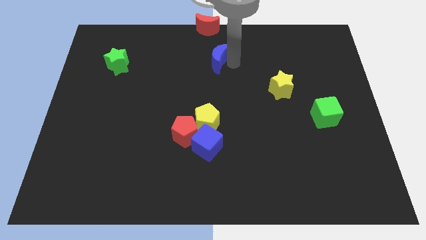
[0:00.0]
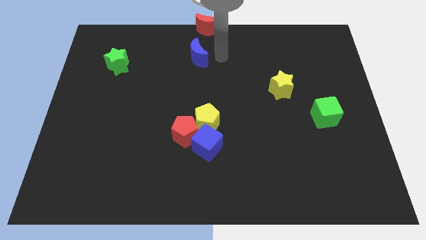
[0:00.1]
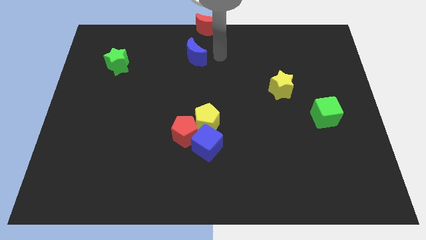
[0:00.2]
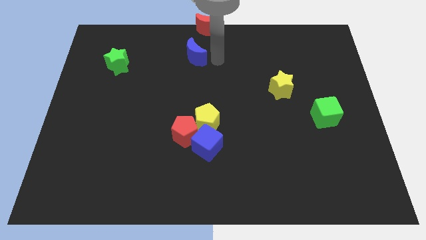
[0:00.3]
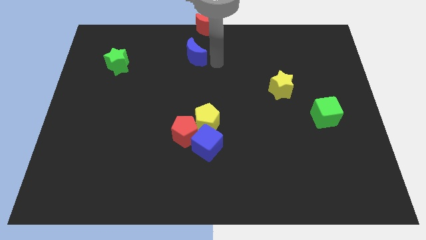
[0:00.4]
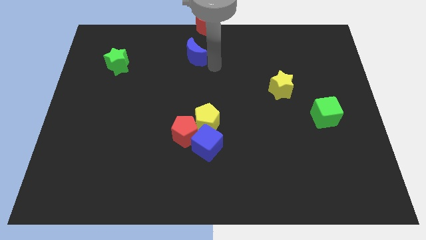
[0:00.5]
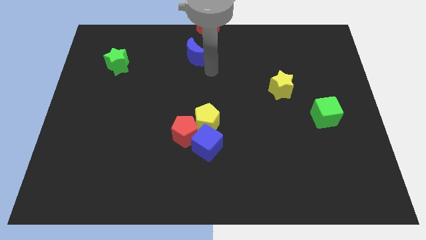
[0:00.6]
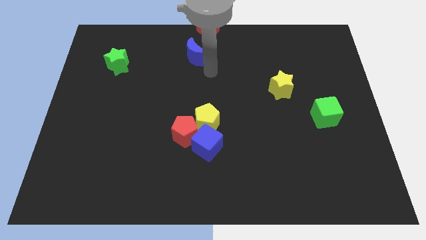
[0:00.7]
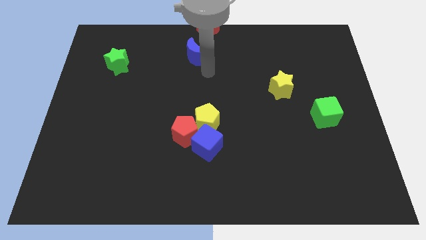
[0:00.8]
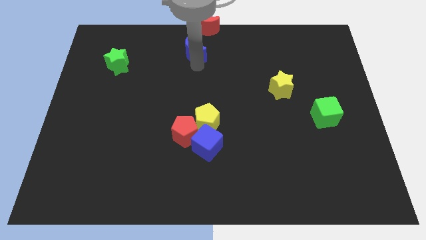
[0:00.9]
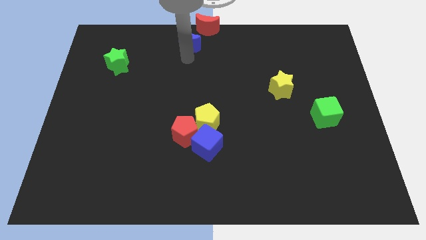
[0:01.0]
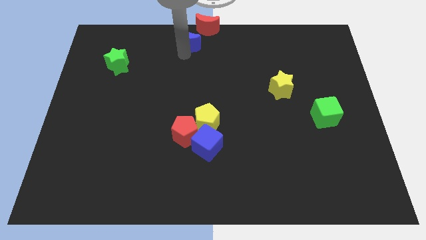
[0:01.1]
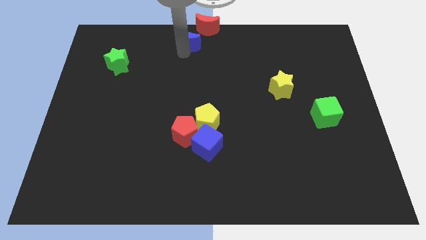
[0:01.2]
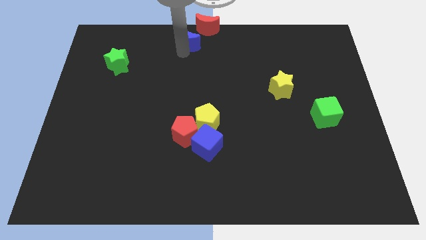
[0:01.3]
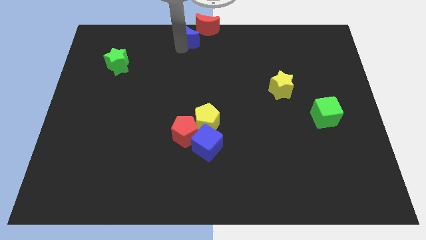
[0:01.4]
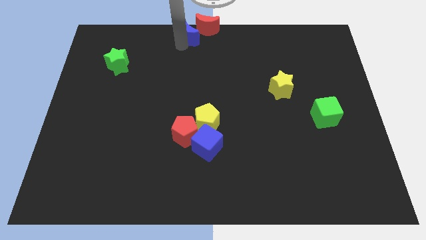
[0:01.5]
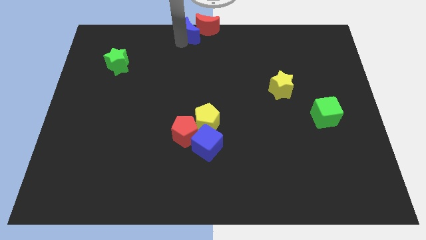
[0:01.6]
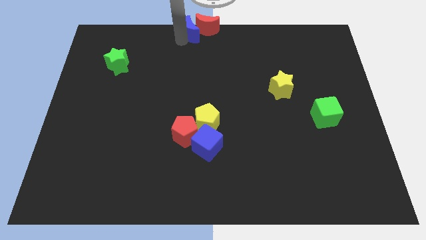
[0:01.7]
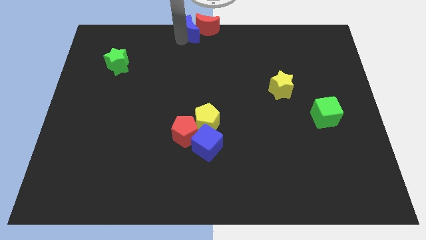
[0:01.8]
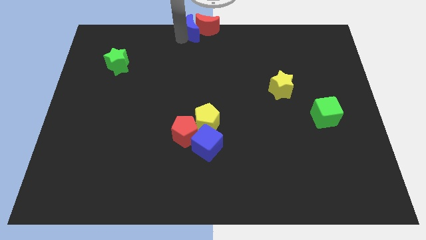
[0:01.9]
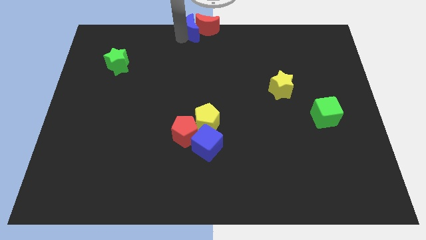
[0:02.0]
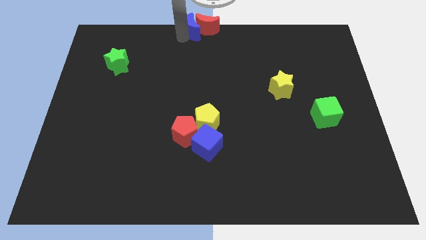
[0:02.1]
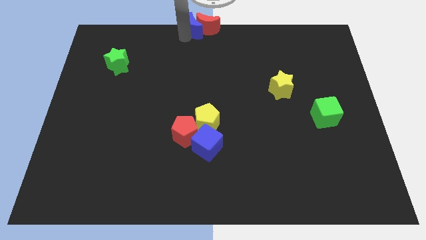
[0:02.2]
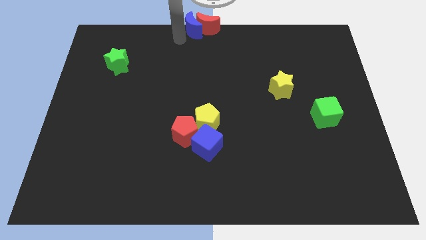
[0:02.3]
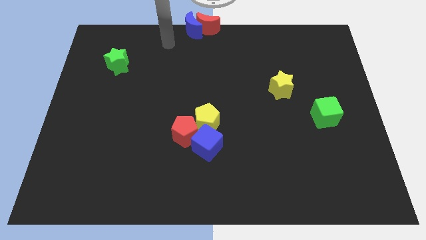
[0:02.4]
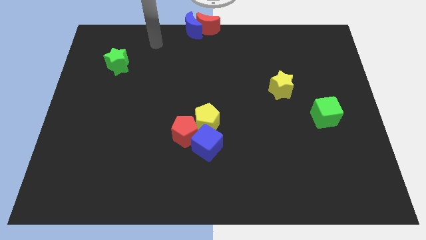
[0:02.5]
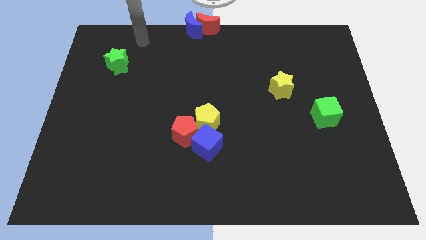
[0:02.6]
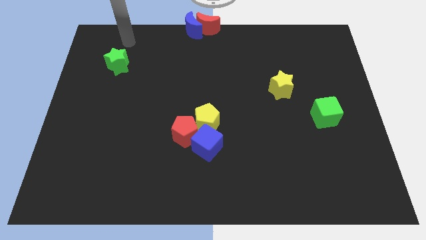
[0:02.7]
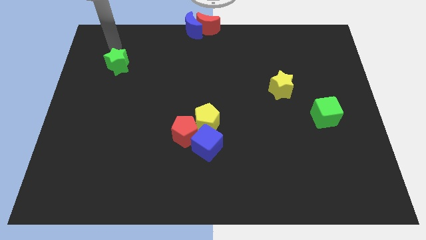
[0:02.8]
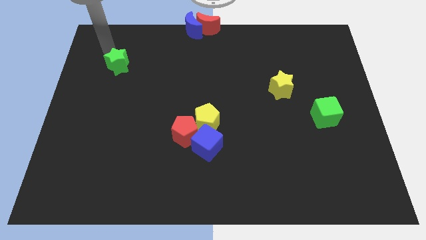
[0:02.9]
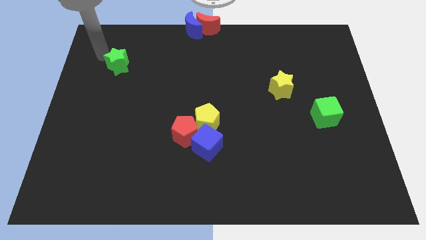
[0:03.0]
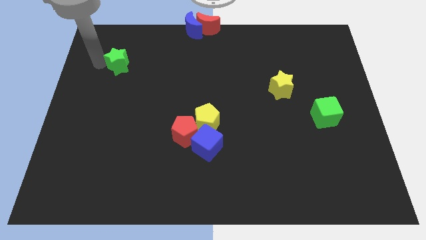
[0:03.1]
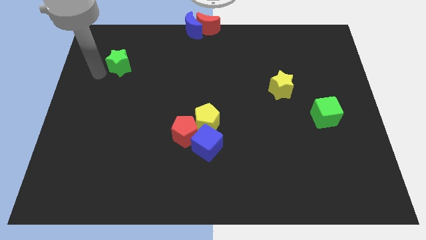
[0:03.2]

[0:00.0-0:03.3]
move the blue crescent left to the red cescent

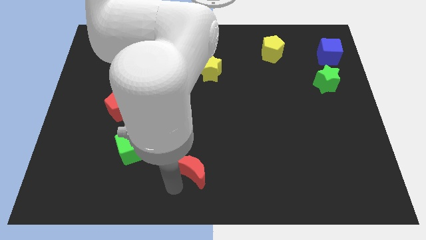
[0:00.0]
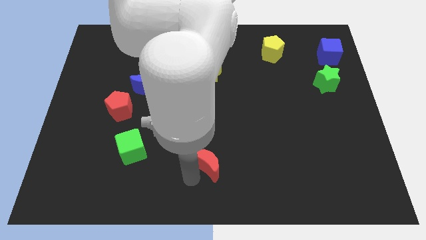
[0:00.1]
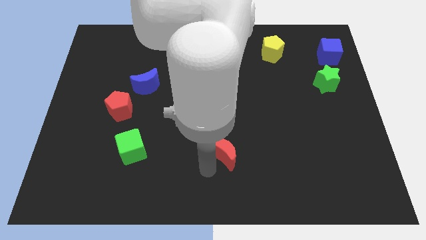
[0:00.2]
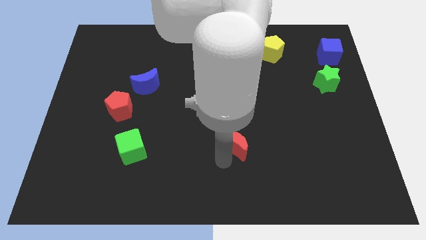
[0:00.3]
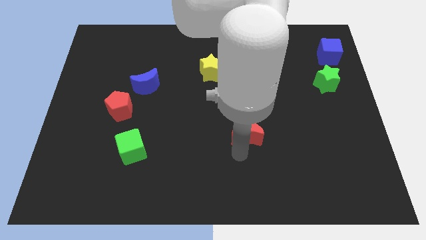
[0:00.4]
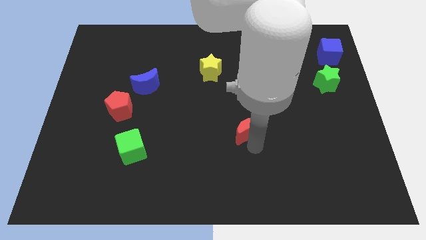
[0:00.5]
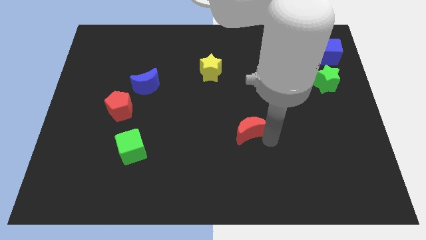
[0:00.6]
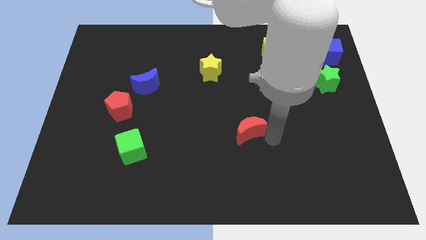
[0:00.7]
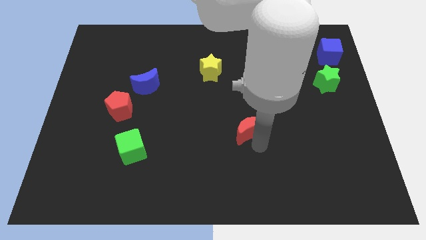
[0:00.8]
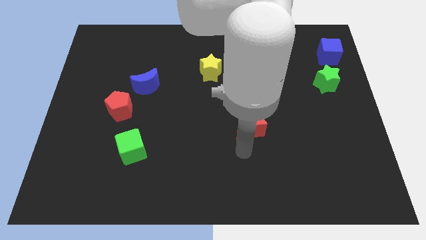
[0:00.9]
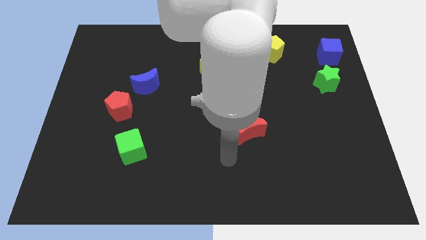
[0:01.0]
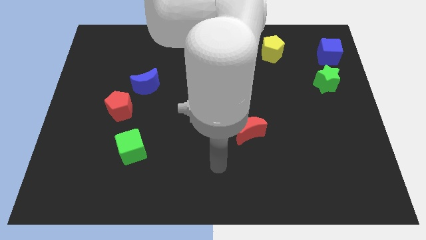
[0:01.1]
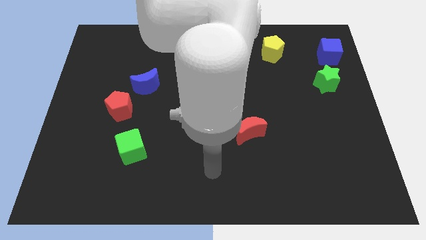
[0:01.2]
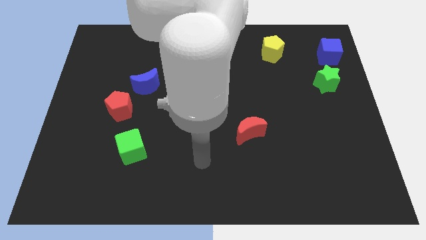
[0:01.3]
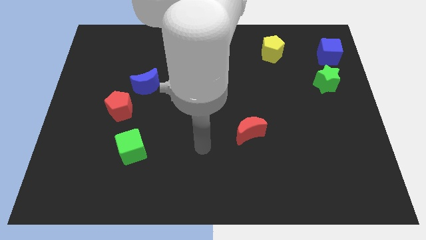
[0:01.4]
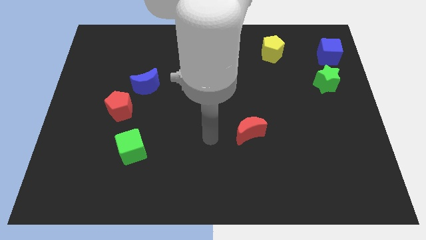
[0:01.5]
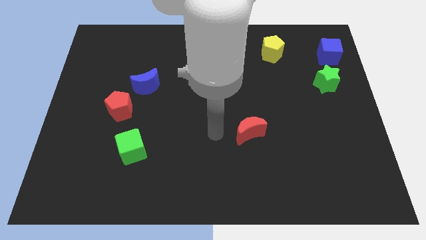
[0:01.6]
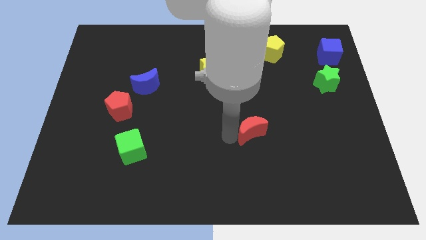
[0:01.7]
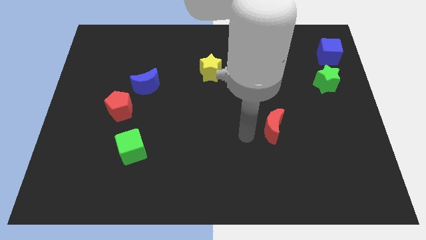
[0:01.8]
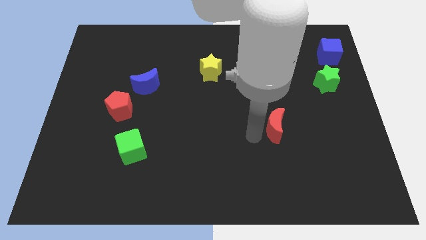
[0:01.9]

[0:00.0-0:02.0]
slide the red moon vertically below the yellow pentagon

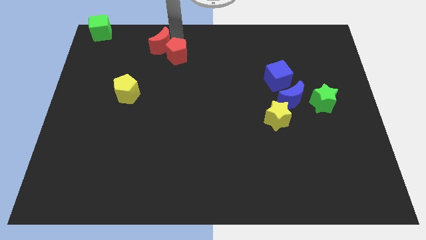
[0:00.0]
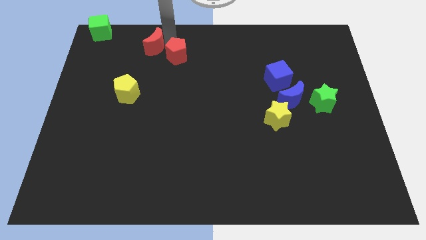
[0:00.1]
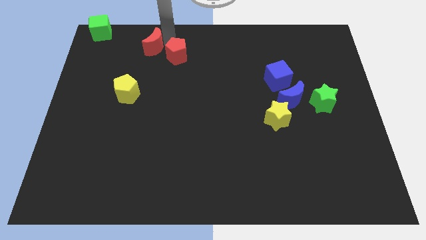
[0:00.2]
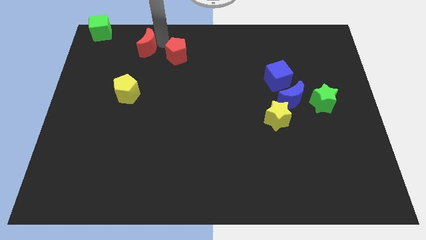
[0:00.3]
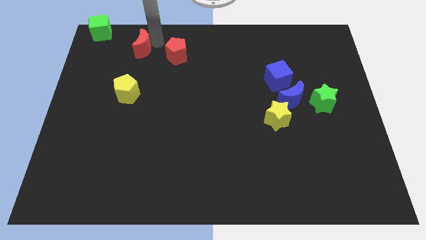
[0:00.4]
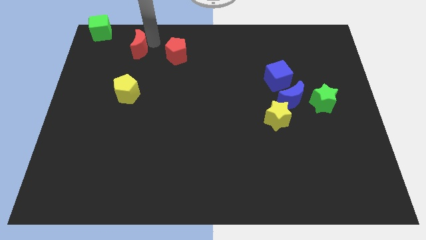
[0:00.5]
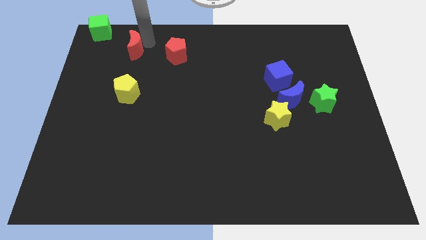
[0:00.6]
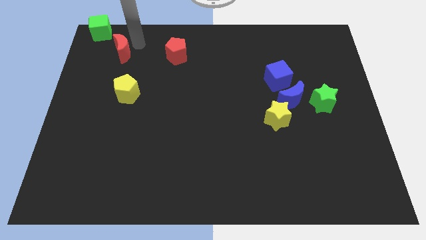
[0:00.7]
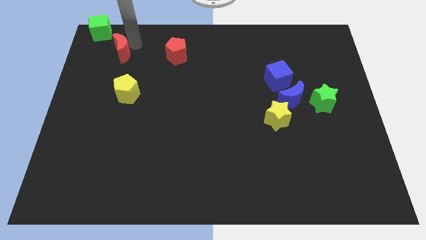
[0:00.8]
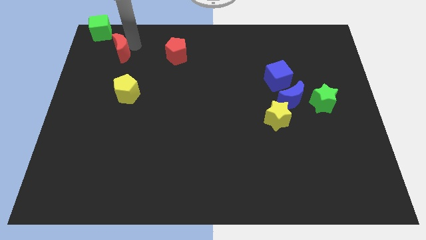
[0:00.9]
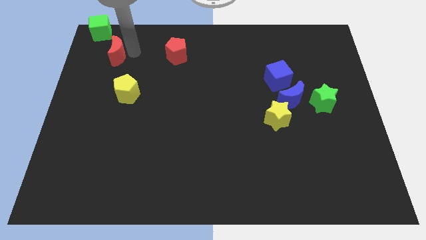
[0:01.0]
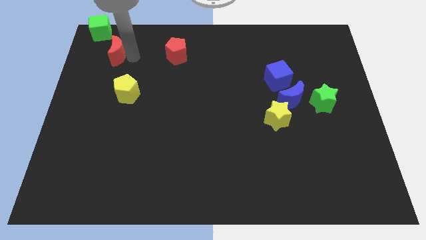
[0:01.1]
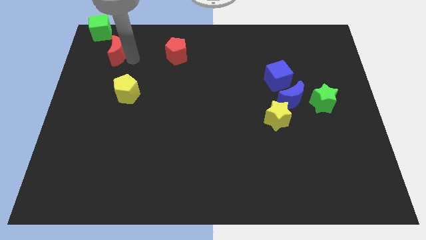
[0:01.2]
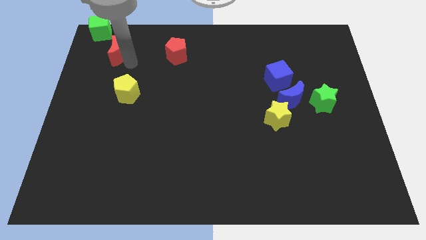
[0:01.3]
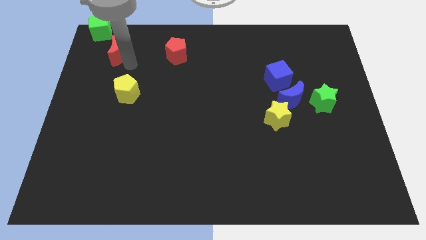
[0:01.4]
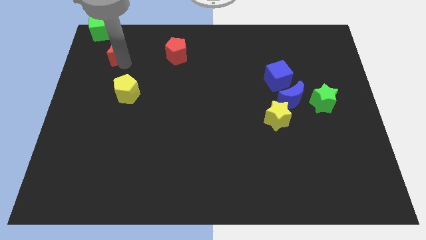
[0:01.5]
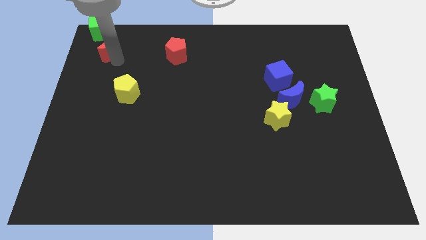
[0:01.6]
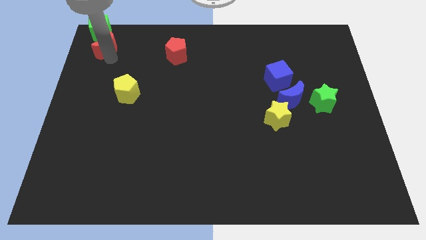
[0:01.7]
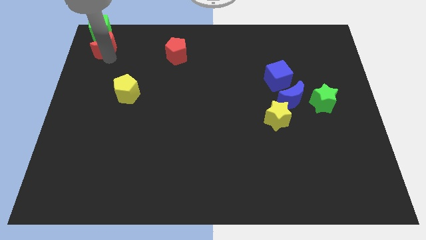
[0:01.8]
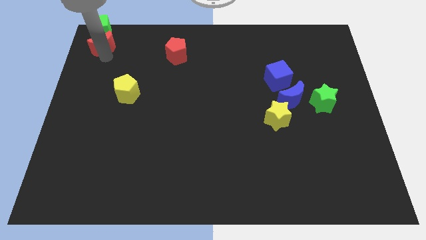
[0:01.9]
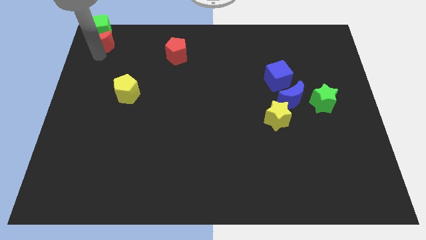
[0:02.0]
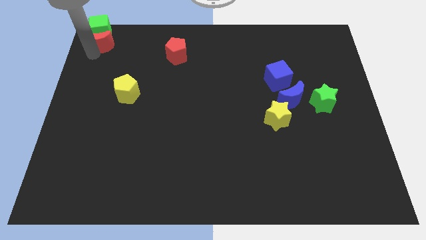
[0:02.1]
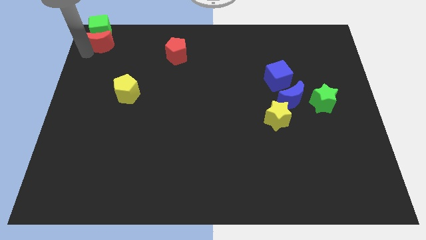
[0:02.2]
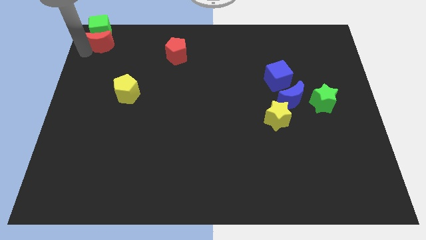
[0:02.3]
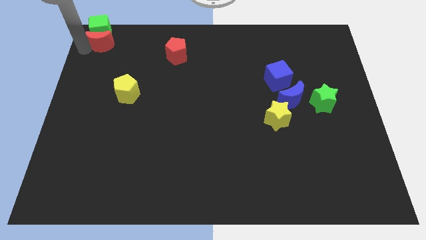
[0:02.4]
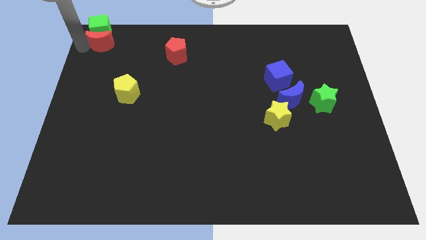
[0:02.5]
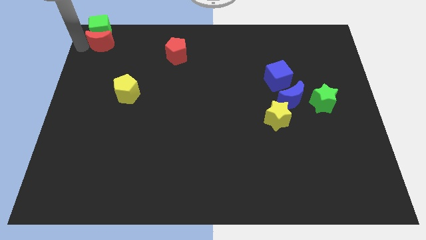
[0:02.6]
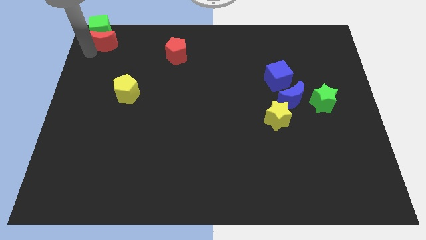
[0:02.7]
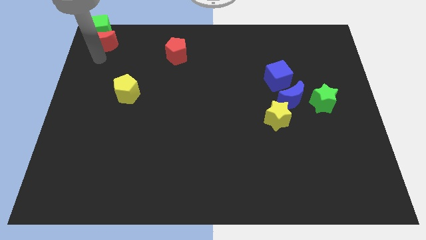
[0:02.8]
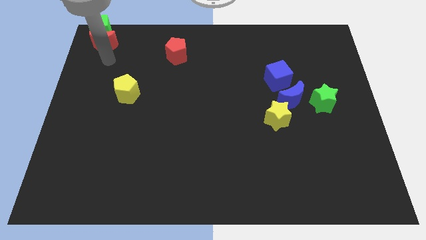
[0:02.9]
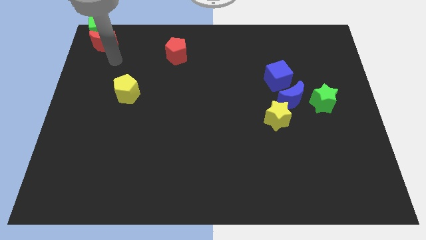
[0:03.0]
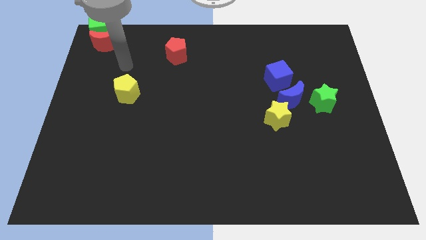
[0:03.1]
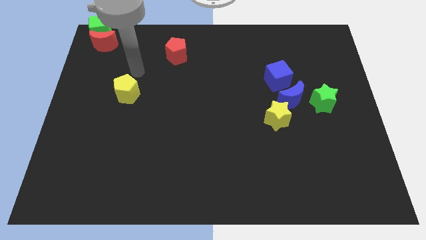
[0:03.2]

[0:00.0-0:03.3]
put the red crescent at the bottom of the green cube

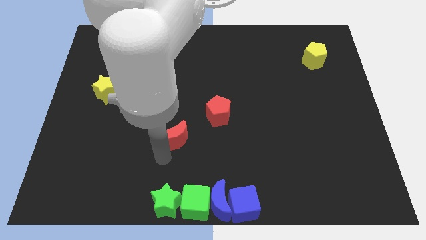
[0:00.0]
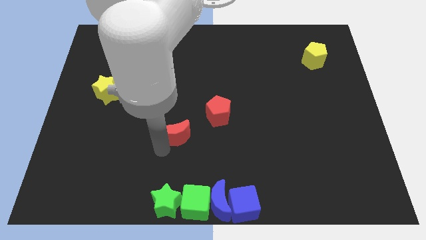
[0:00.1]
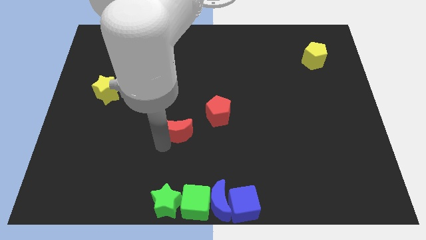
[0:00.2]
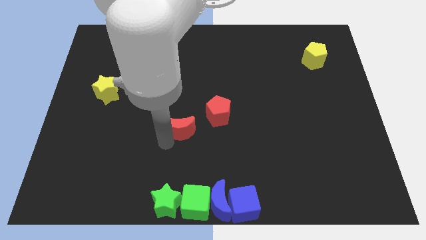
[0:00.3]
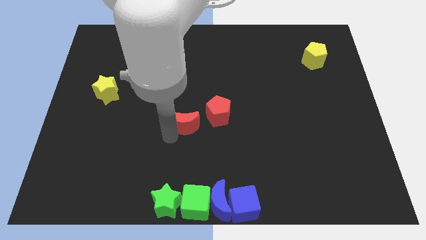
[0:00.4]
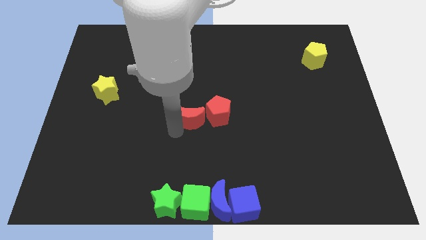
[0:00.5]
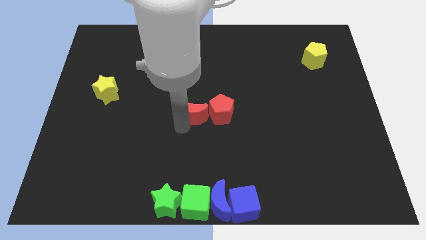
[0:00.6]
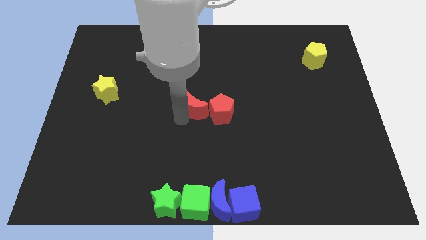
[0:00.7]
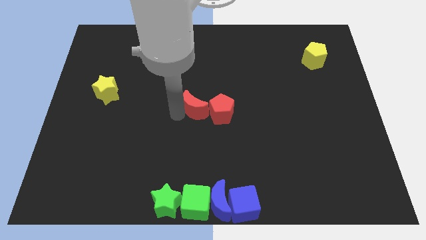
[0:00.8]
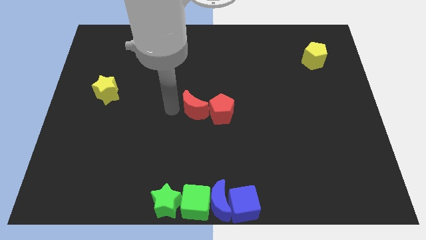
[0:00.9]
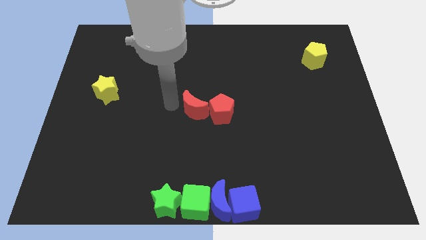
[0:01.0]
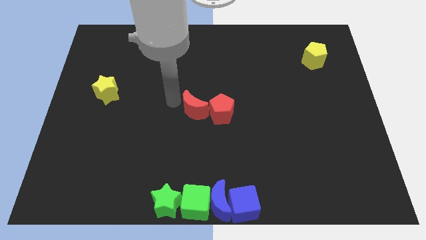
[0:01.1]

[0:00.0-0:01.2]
push the red crescent to the left of the red pentagon
